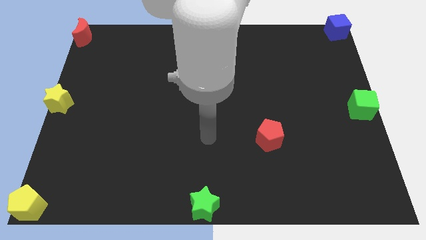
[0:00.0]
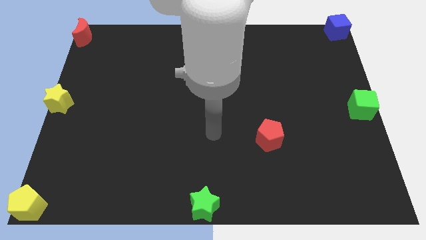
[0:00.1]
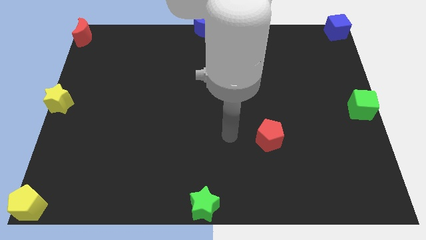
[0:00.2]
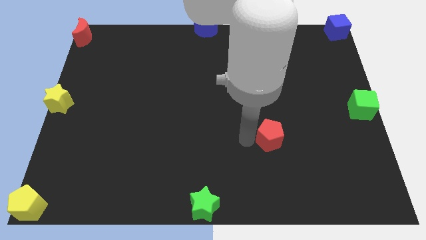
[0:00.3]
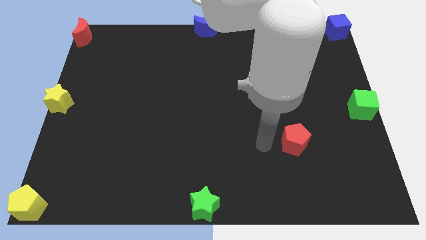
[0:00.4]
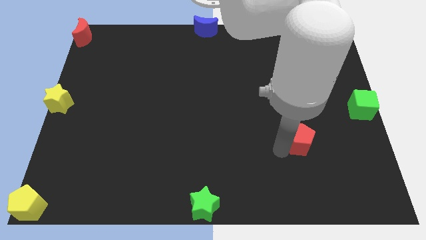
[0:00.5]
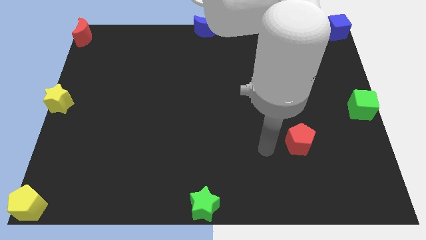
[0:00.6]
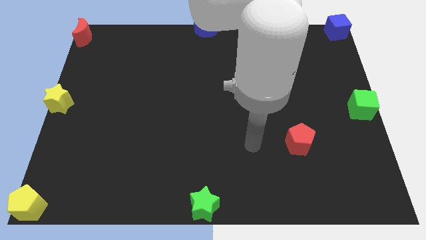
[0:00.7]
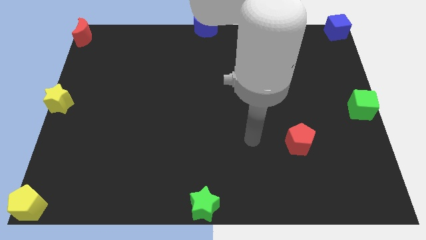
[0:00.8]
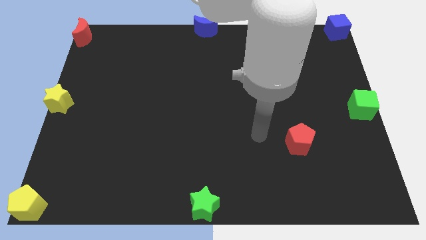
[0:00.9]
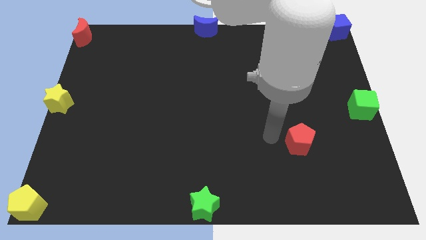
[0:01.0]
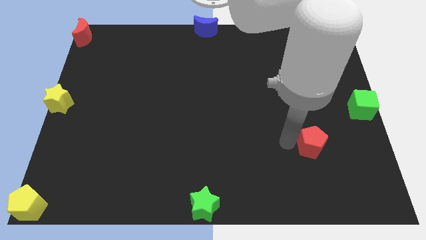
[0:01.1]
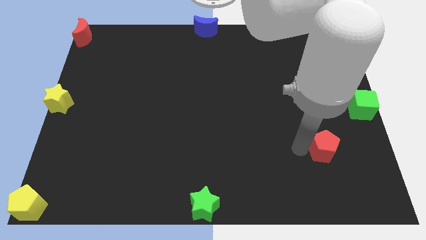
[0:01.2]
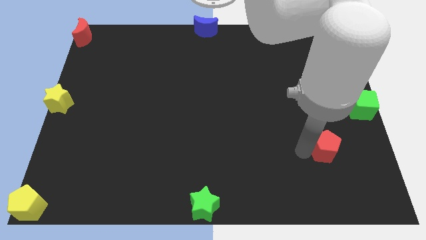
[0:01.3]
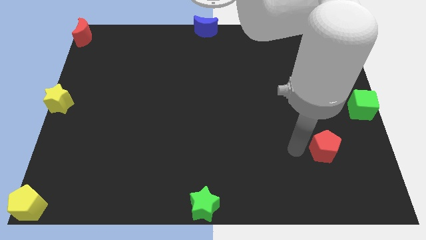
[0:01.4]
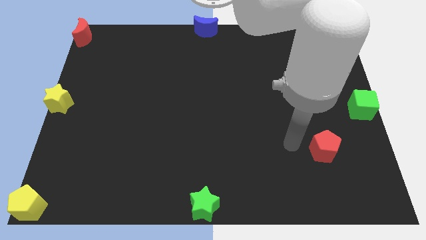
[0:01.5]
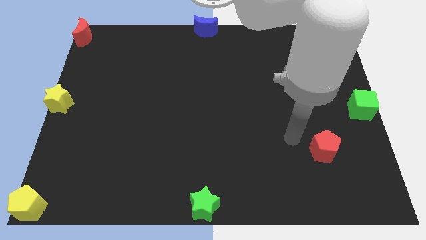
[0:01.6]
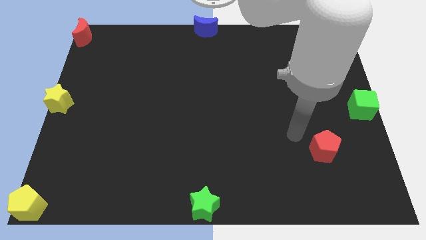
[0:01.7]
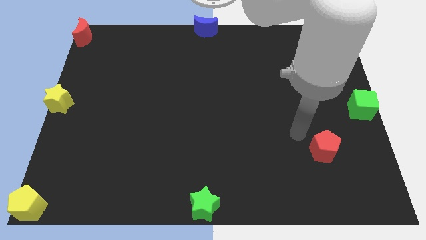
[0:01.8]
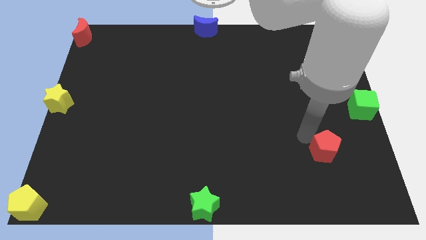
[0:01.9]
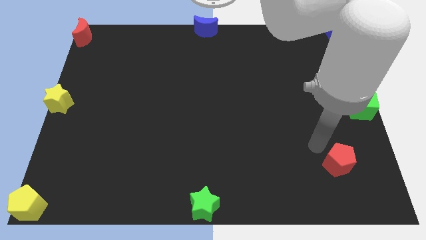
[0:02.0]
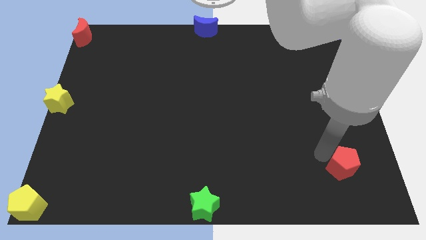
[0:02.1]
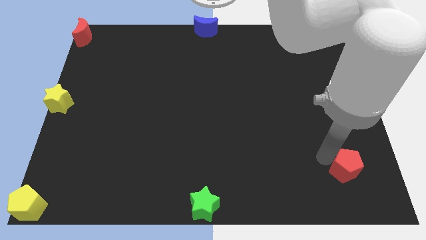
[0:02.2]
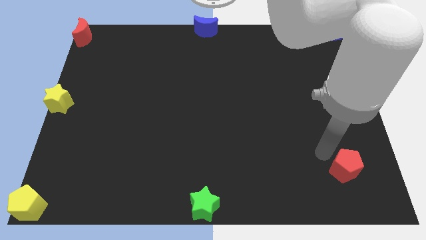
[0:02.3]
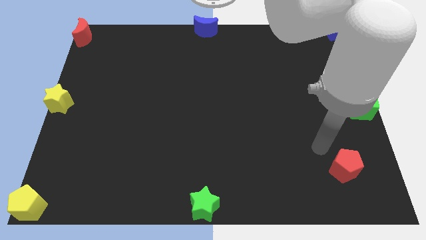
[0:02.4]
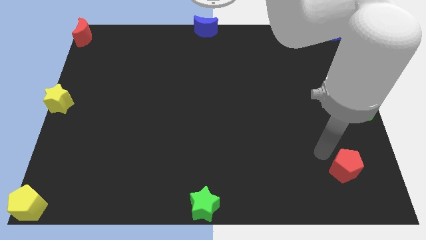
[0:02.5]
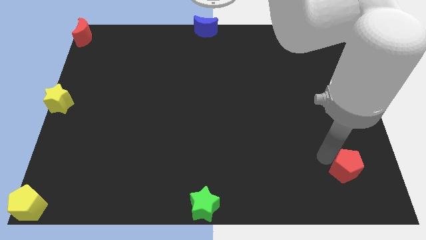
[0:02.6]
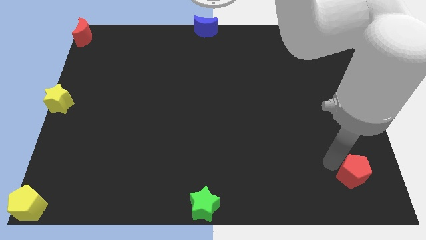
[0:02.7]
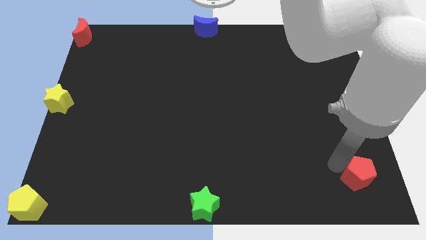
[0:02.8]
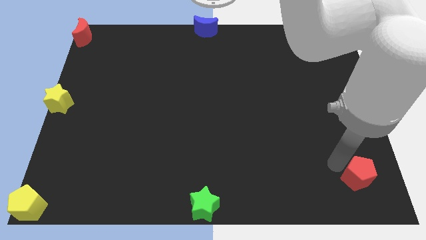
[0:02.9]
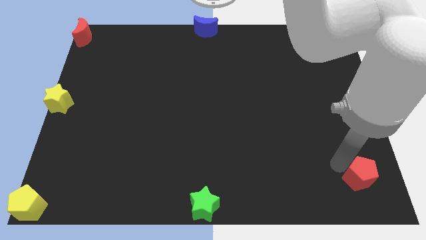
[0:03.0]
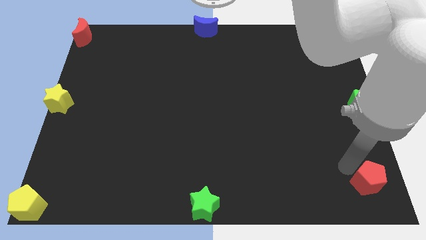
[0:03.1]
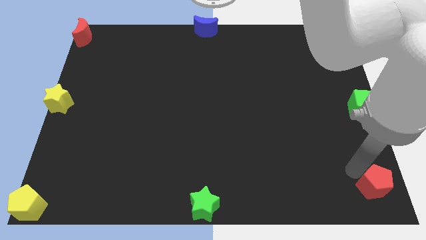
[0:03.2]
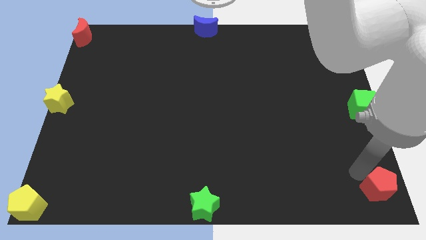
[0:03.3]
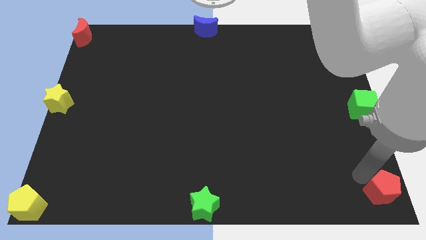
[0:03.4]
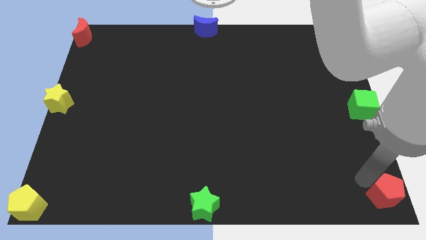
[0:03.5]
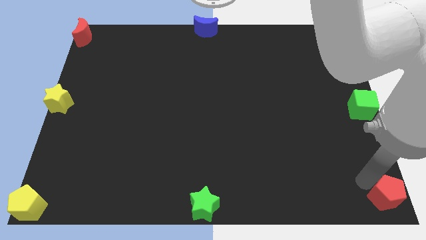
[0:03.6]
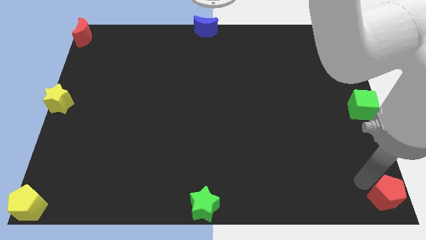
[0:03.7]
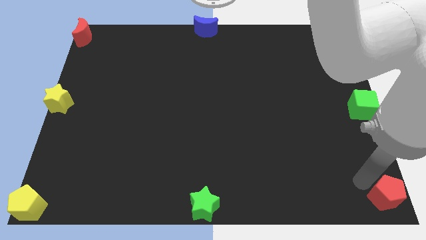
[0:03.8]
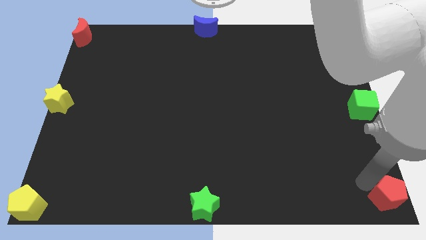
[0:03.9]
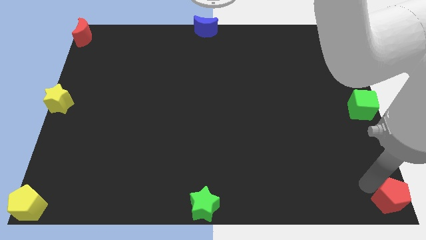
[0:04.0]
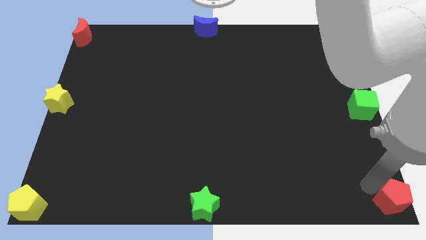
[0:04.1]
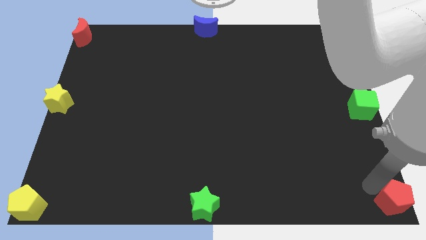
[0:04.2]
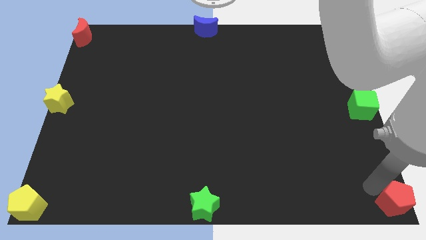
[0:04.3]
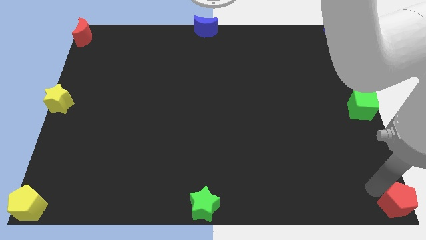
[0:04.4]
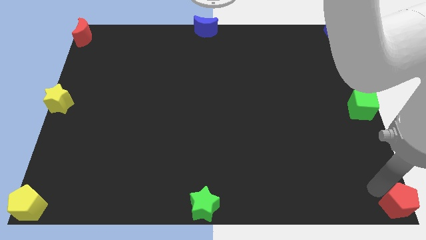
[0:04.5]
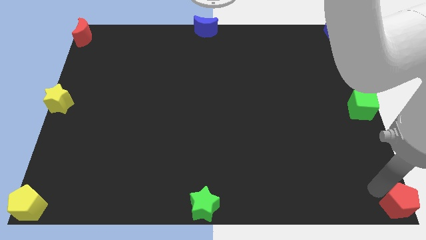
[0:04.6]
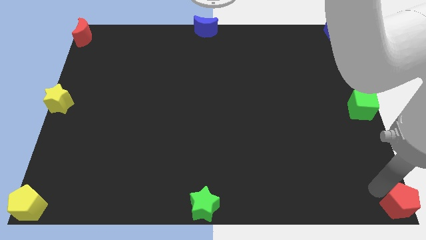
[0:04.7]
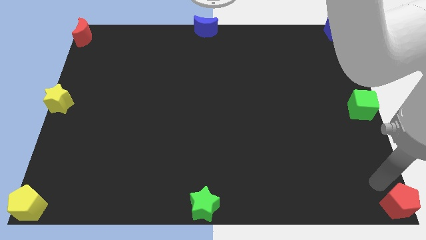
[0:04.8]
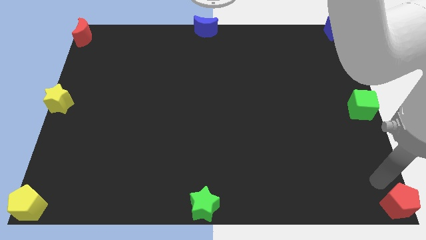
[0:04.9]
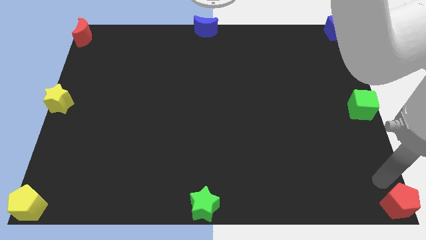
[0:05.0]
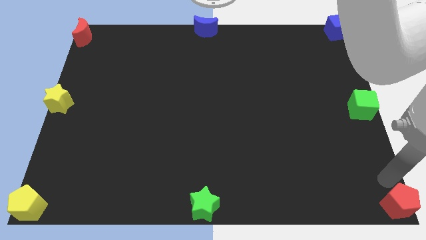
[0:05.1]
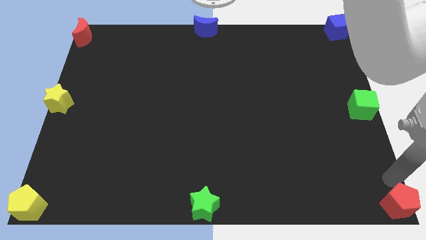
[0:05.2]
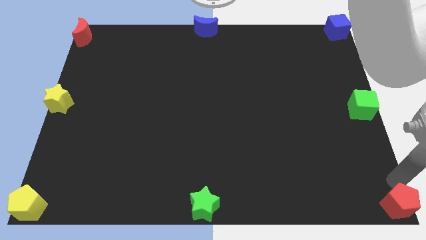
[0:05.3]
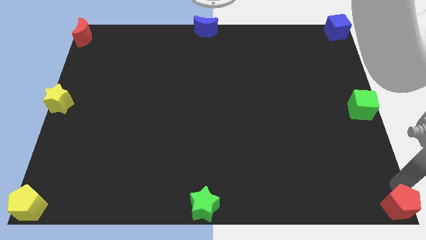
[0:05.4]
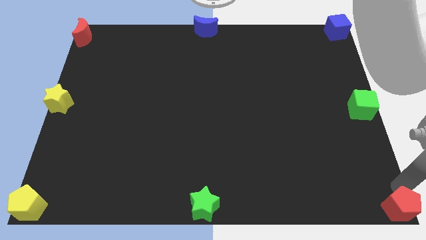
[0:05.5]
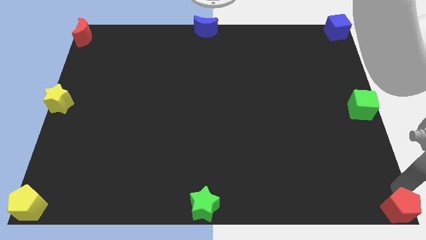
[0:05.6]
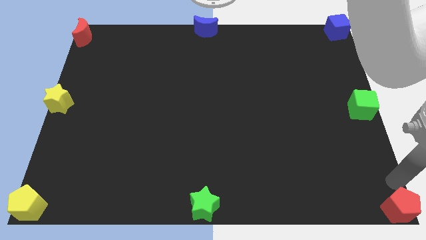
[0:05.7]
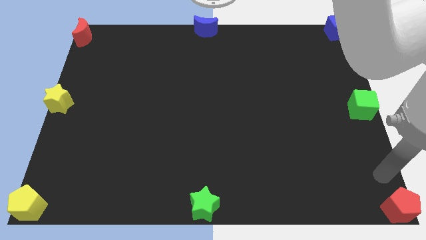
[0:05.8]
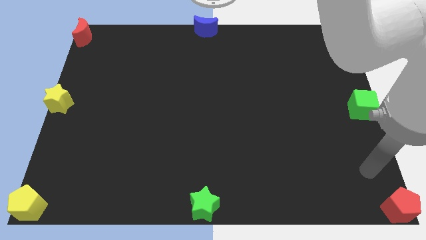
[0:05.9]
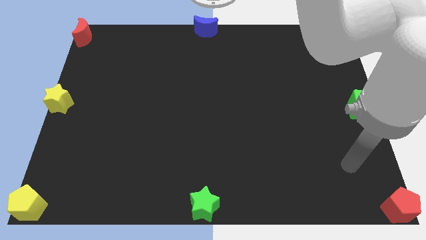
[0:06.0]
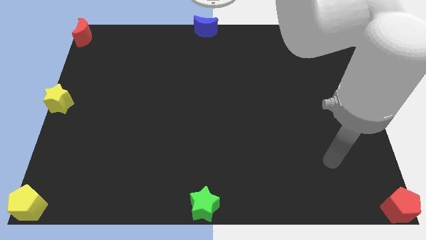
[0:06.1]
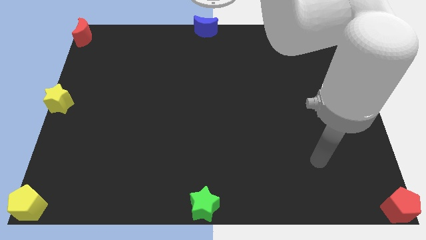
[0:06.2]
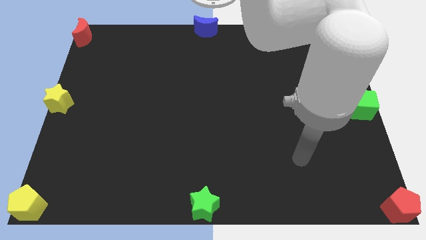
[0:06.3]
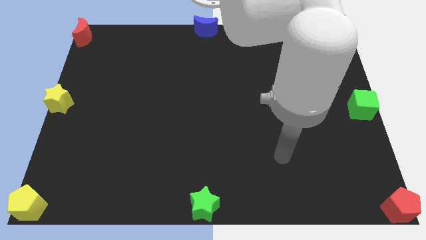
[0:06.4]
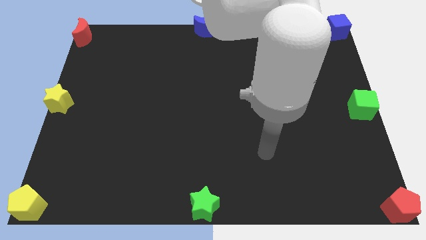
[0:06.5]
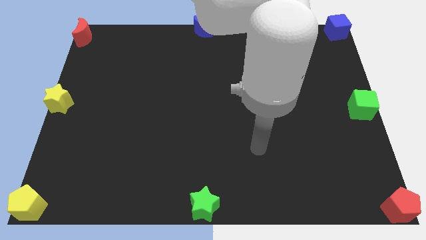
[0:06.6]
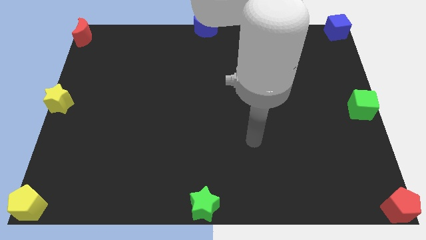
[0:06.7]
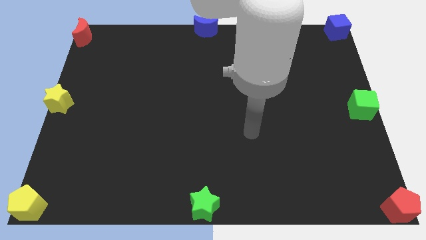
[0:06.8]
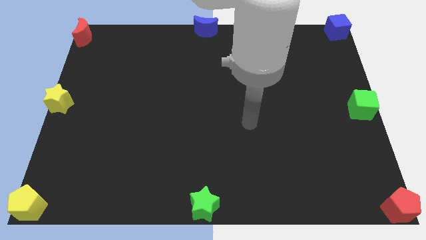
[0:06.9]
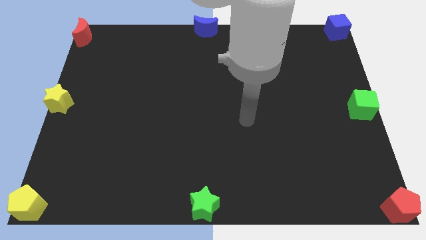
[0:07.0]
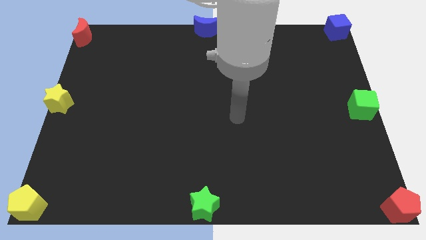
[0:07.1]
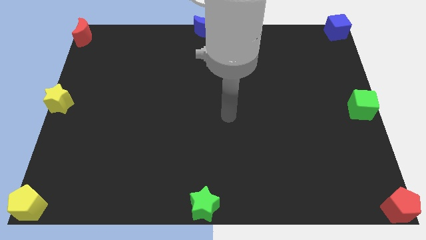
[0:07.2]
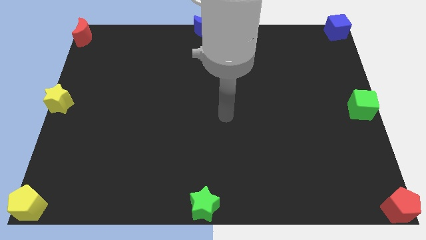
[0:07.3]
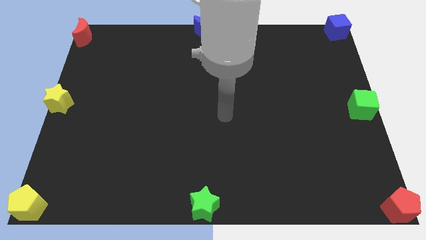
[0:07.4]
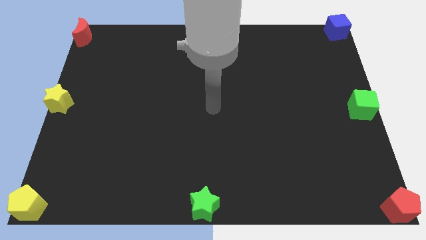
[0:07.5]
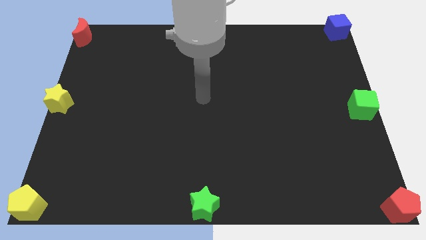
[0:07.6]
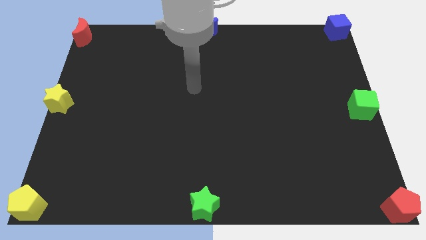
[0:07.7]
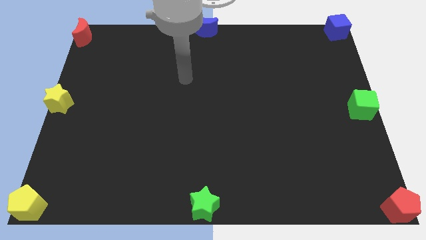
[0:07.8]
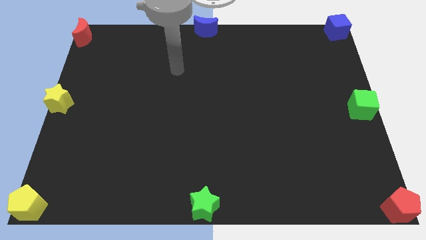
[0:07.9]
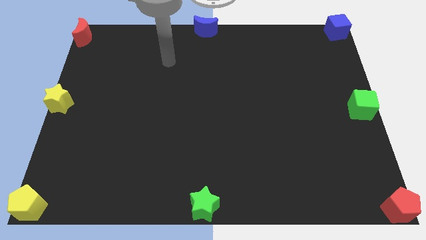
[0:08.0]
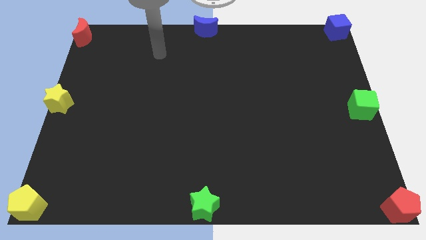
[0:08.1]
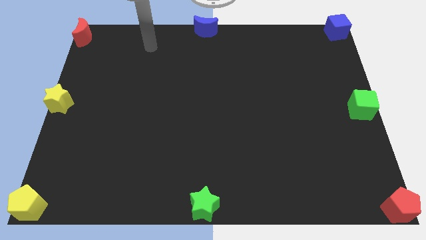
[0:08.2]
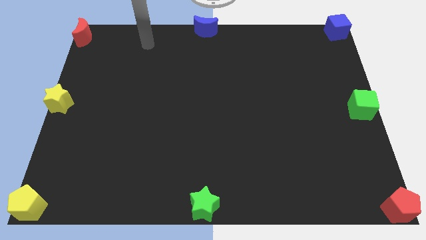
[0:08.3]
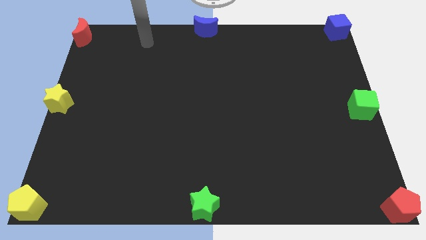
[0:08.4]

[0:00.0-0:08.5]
slide the red pentagon to the bottom right corner of the board

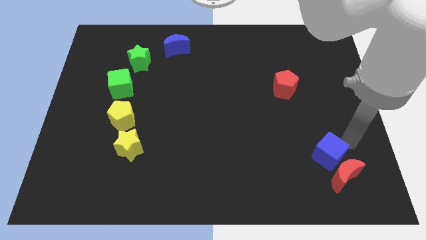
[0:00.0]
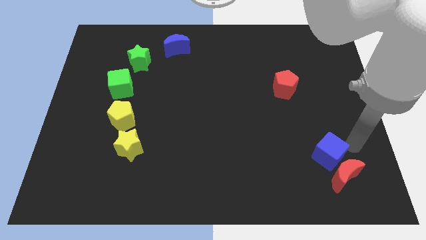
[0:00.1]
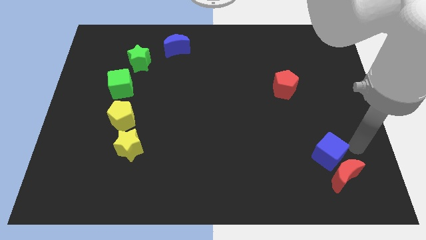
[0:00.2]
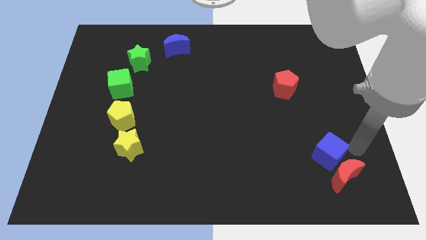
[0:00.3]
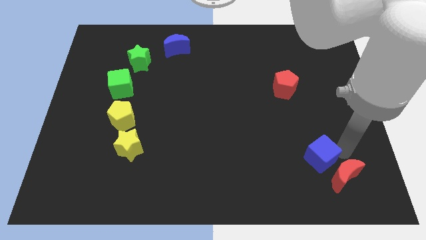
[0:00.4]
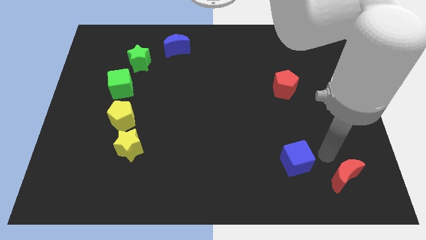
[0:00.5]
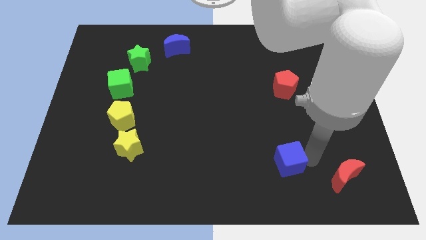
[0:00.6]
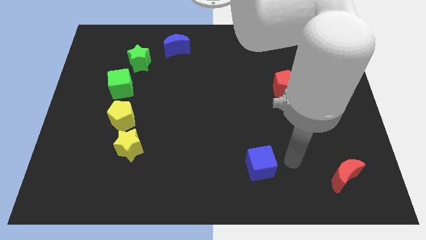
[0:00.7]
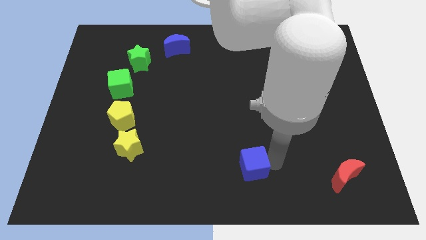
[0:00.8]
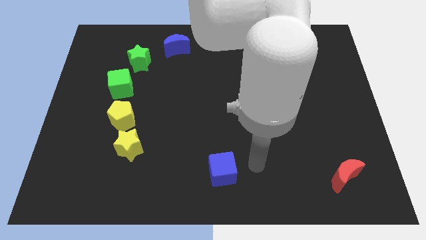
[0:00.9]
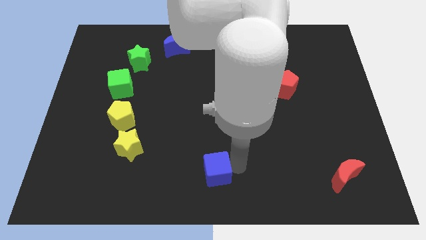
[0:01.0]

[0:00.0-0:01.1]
push the blue cube to the left of the board
